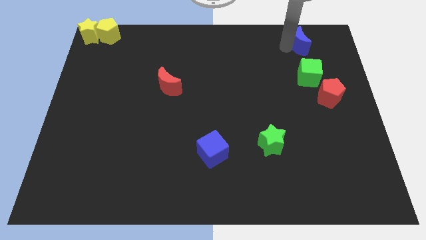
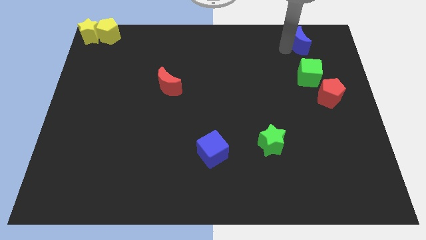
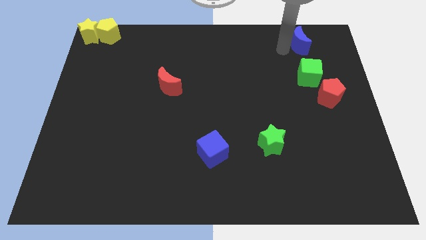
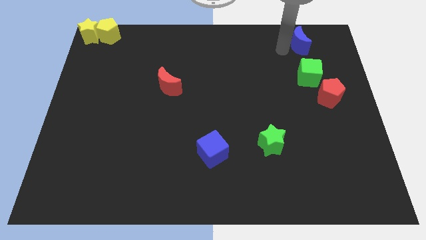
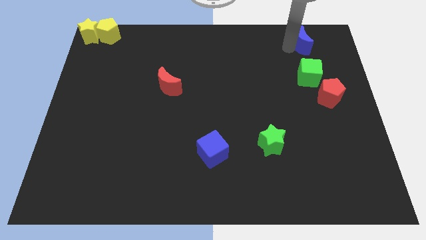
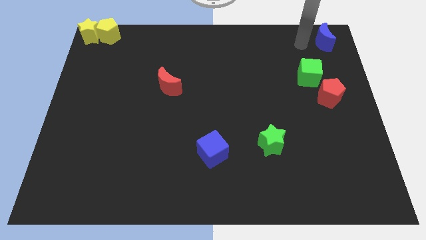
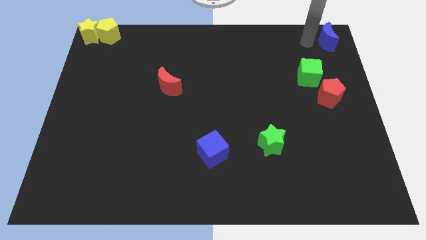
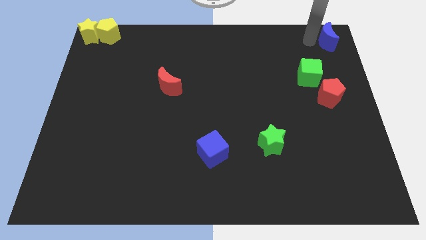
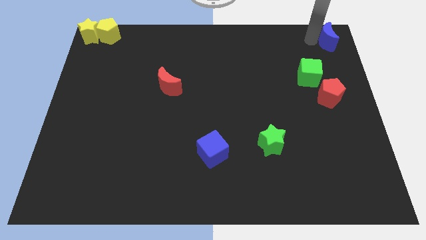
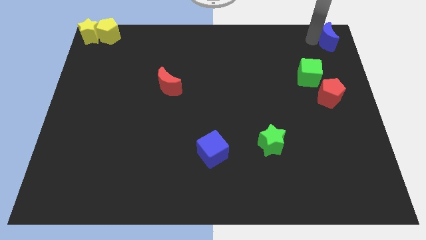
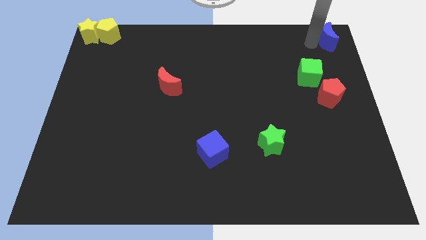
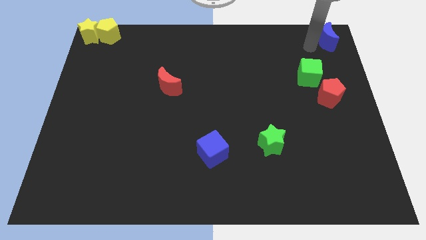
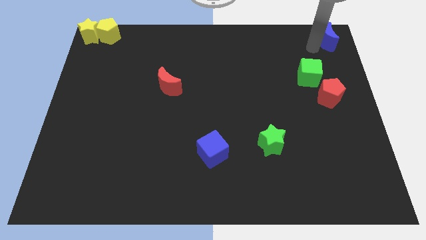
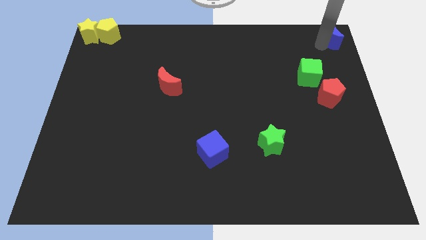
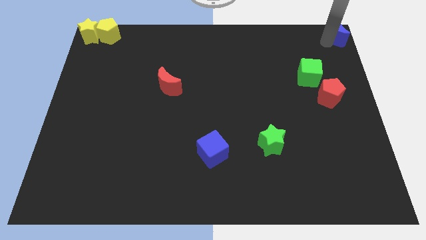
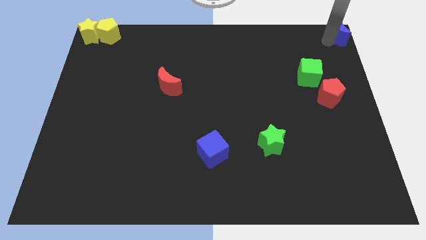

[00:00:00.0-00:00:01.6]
push the blue crescent to the top right to the board

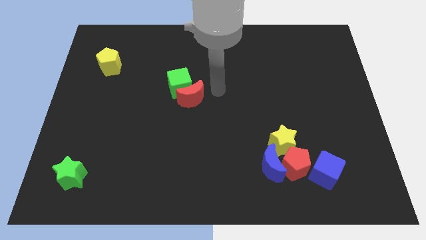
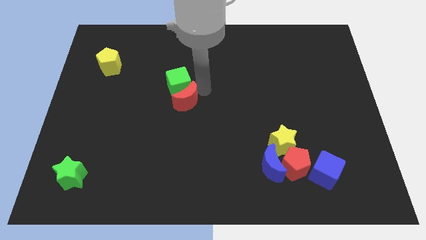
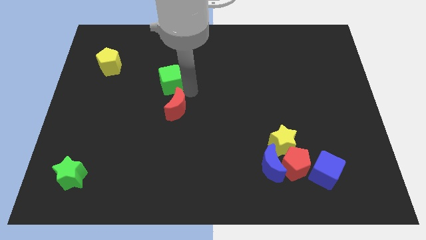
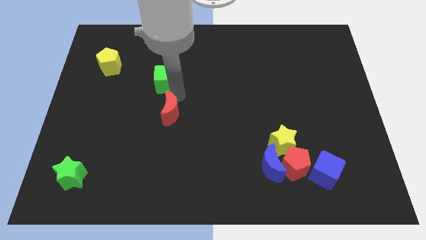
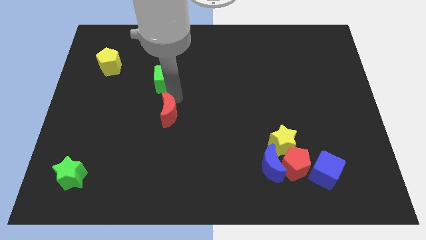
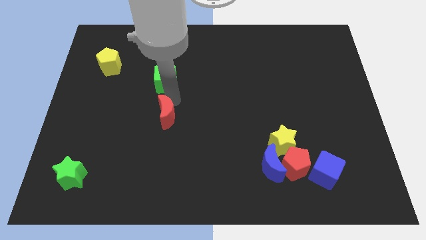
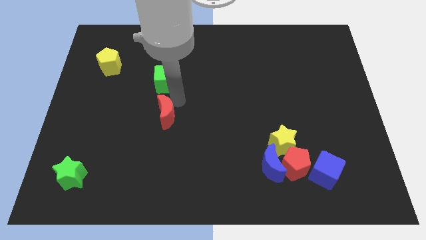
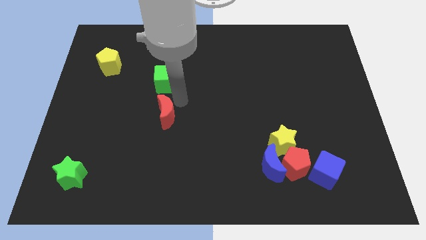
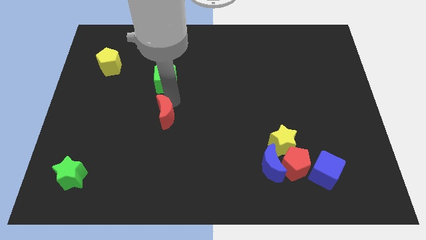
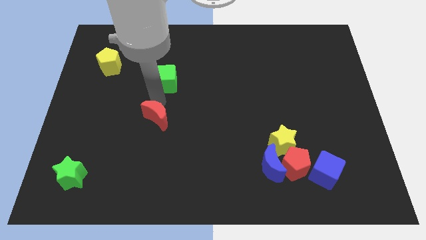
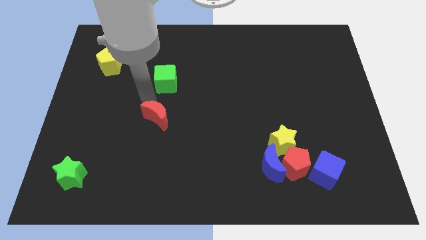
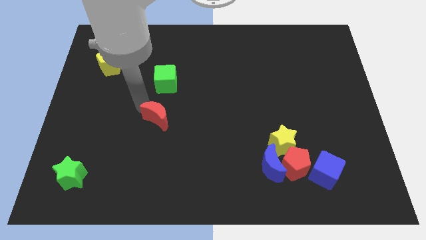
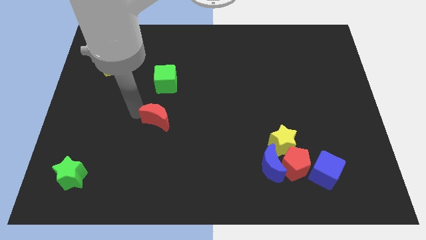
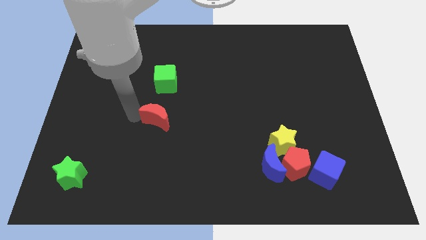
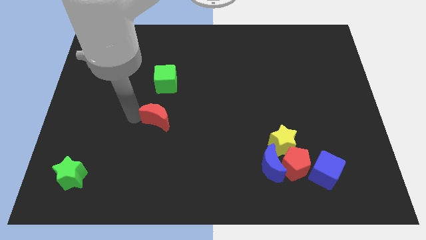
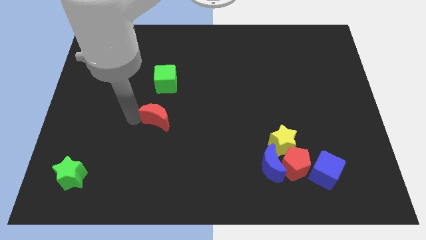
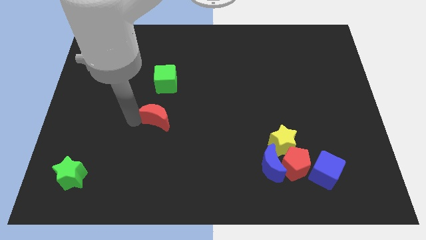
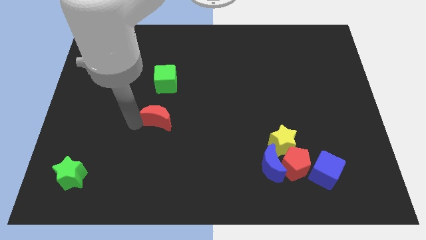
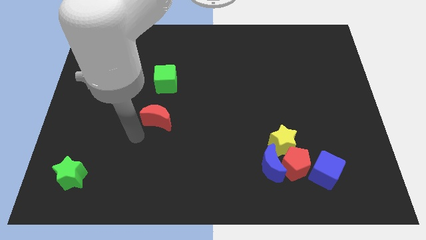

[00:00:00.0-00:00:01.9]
push the red crescent to the center of the board

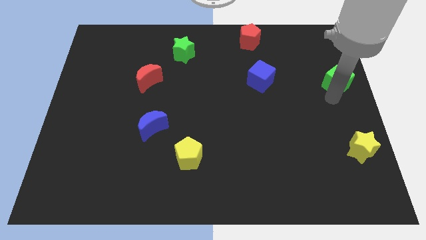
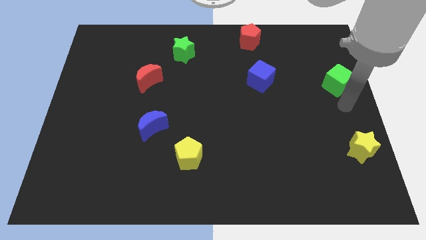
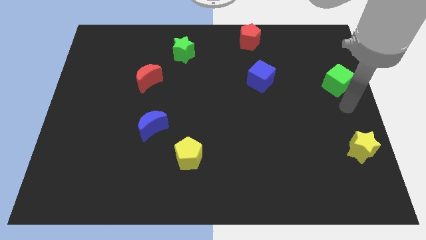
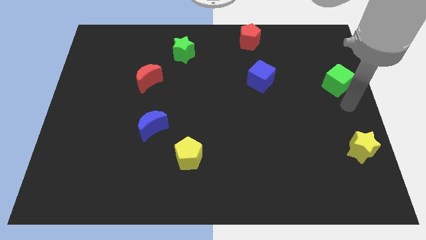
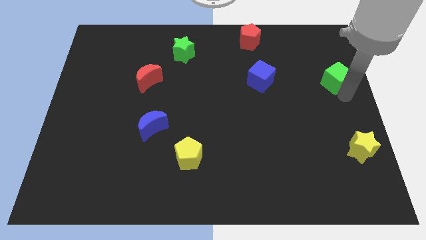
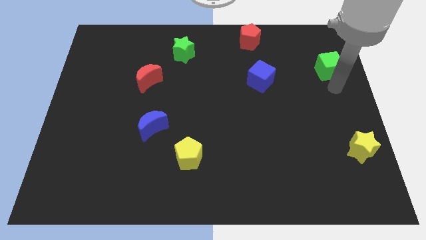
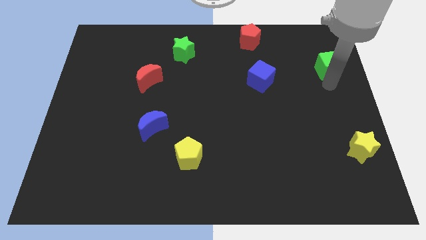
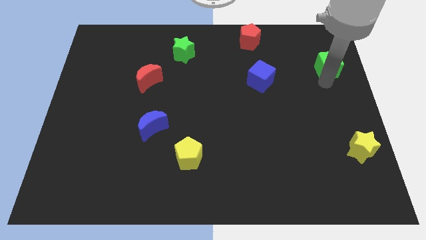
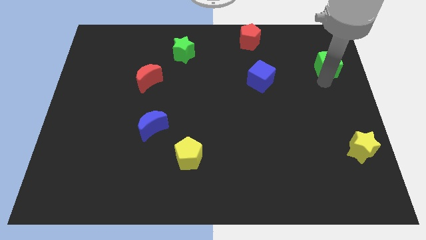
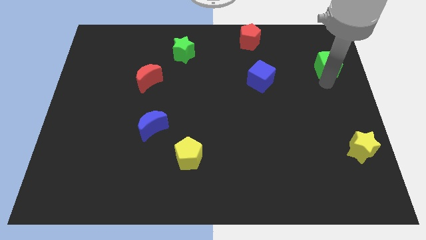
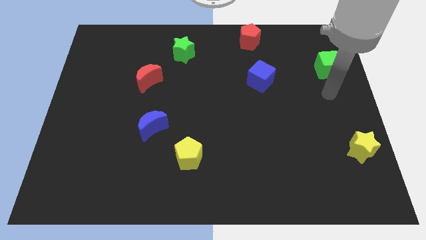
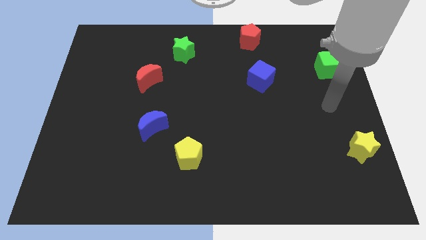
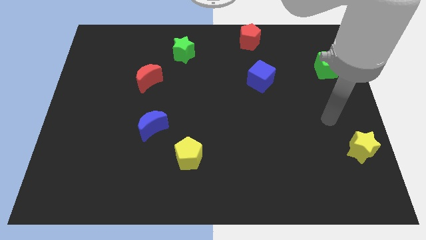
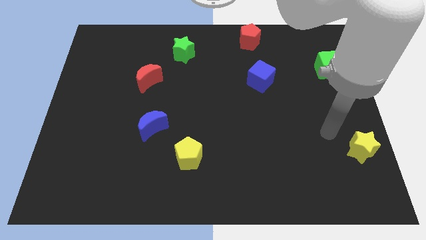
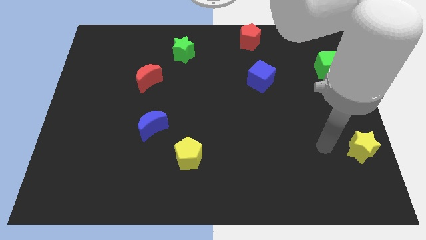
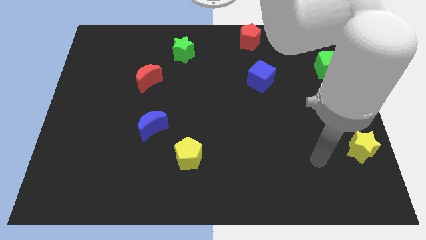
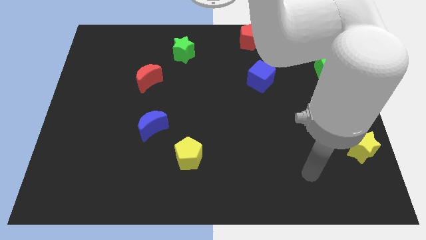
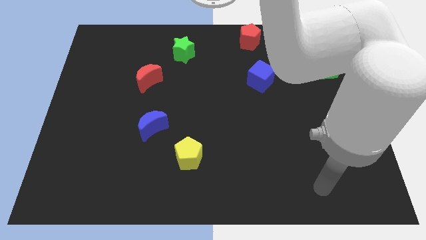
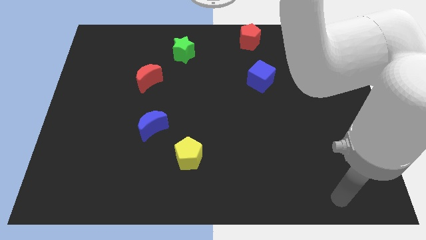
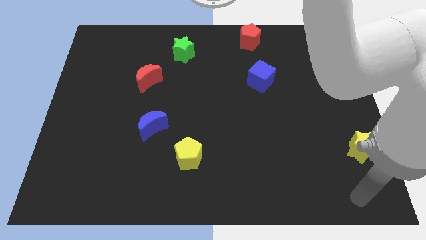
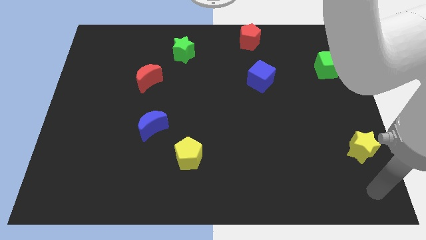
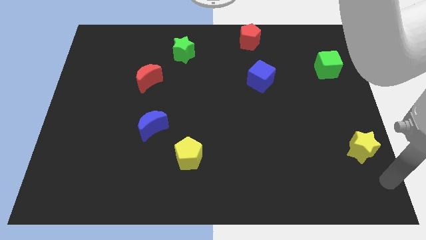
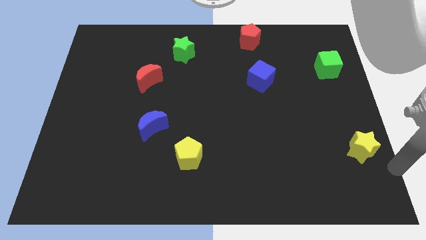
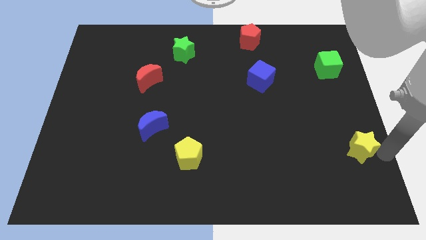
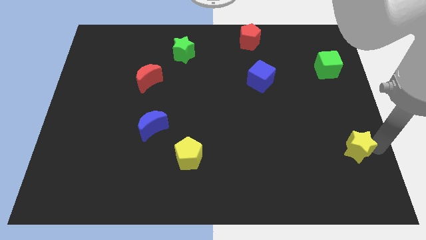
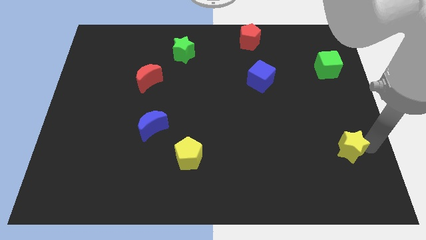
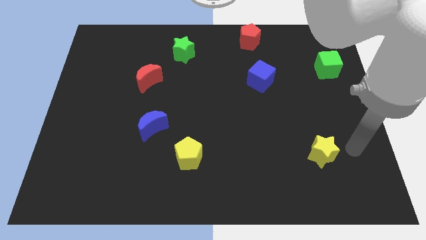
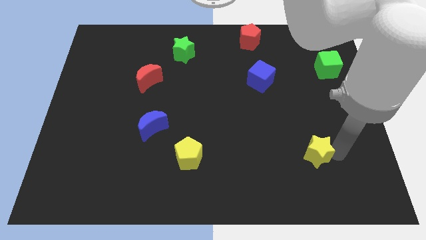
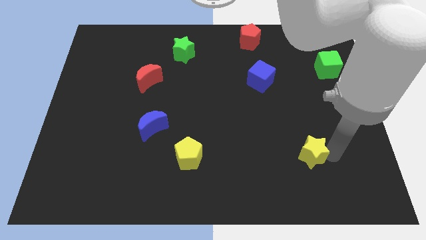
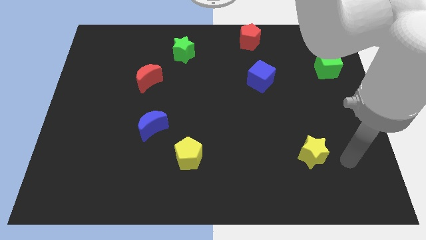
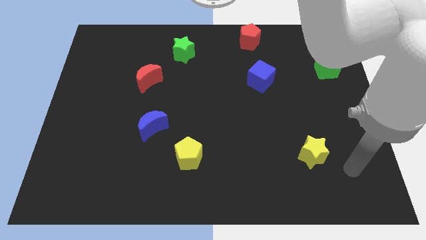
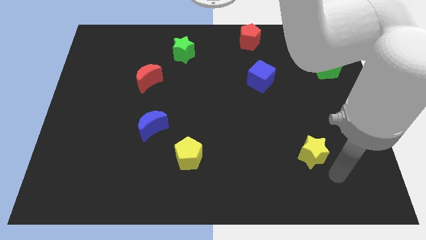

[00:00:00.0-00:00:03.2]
place the yellow star parallel to the yellow pentagon

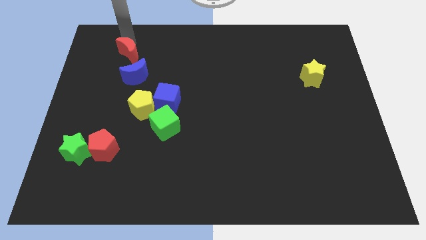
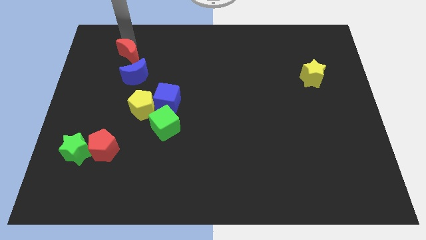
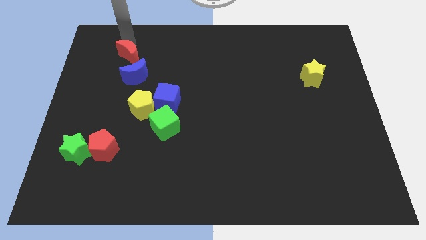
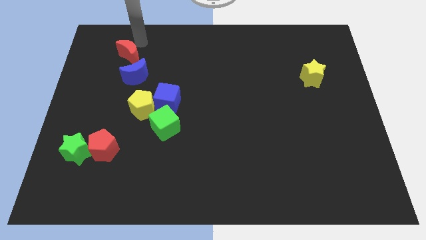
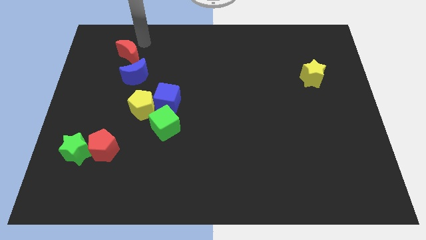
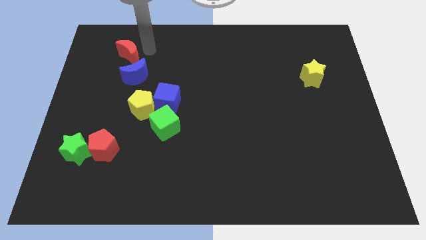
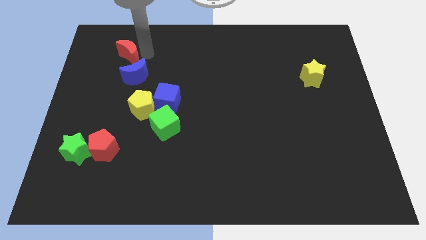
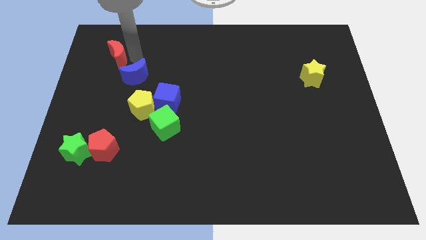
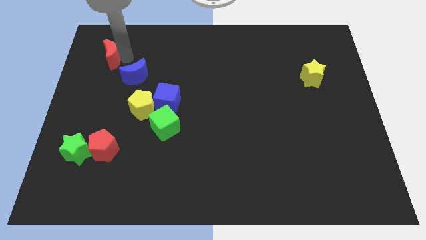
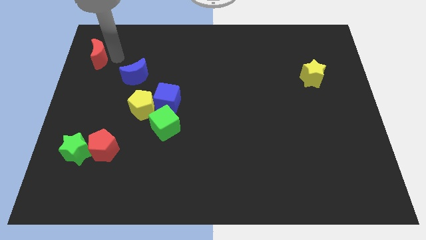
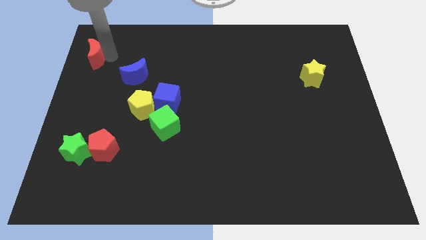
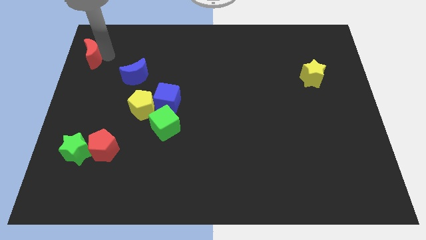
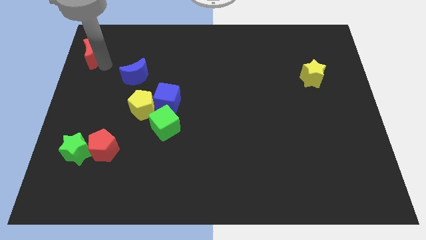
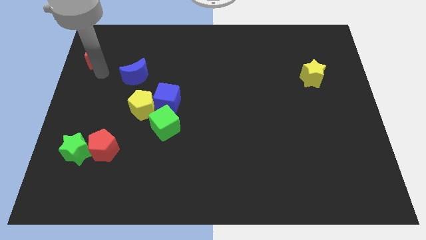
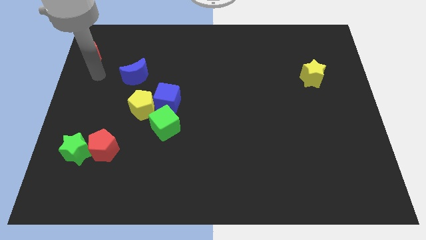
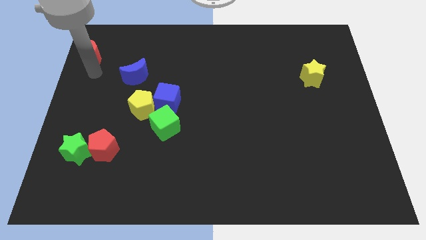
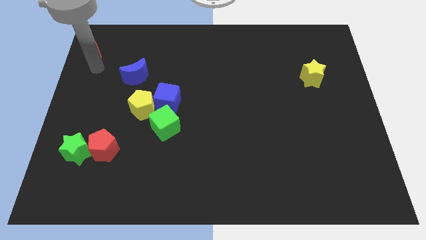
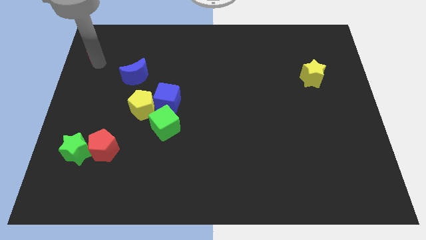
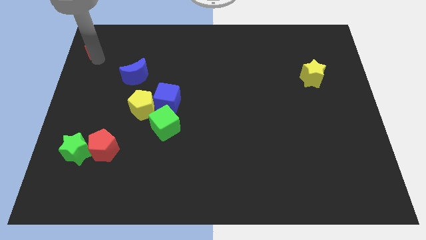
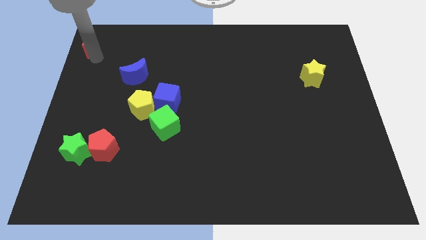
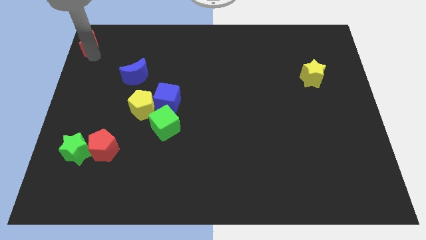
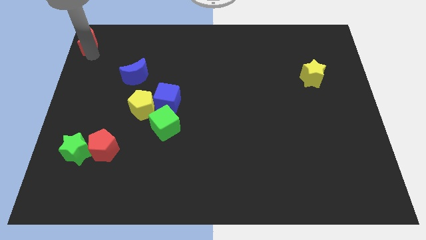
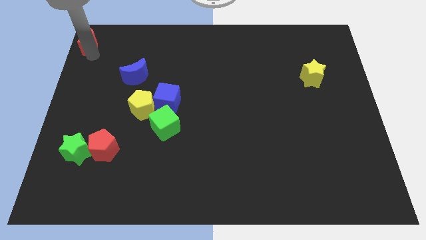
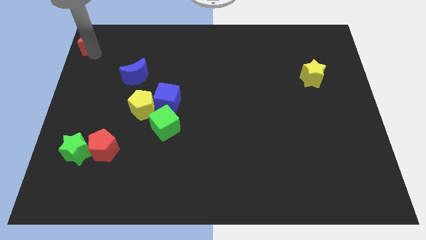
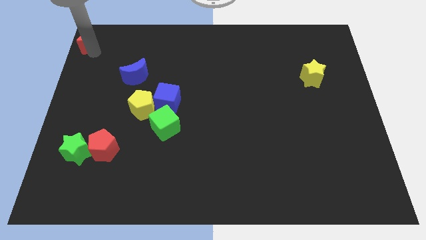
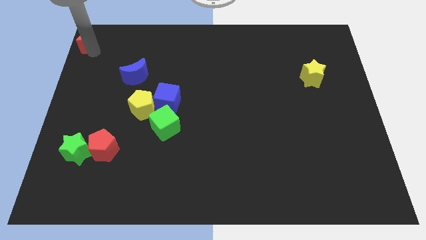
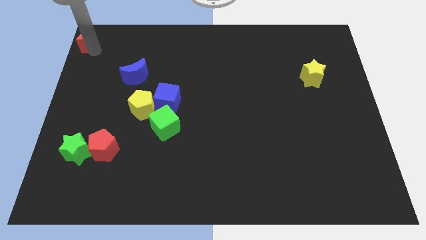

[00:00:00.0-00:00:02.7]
place red crescent on the top left corner of the board
